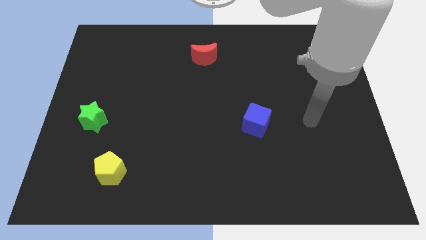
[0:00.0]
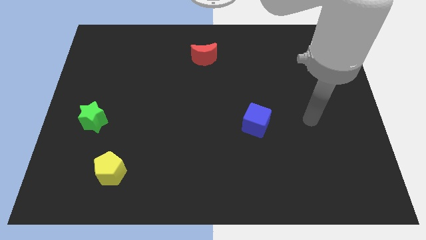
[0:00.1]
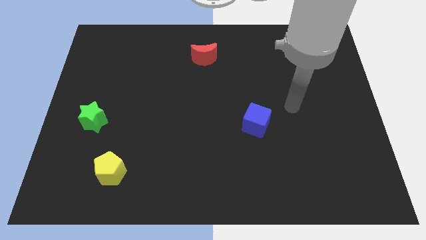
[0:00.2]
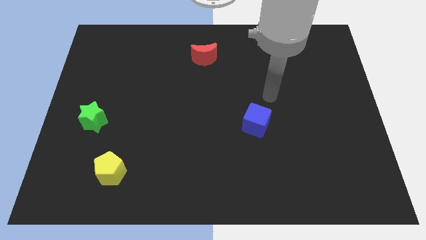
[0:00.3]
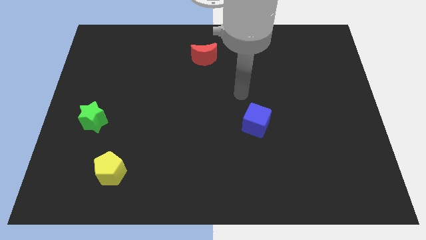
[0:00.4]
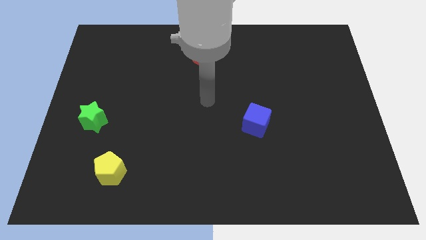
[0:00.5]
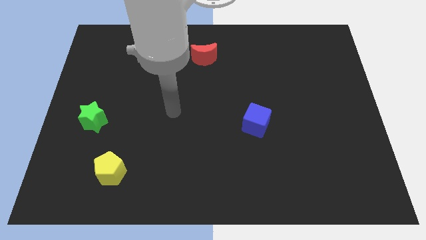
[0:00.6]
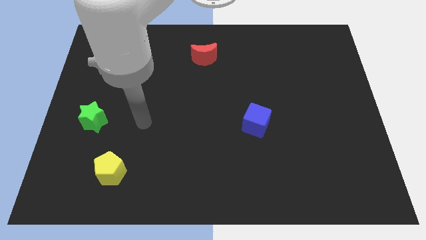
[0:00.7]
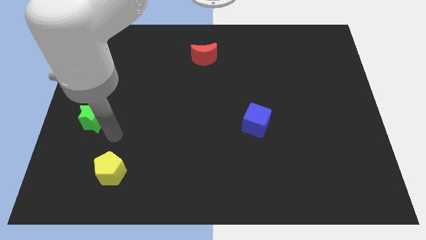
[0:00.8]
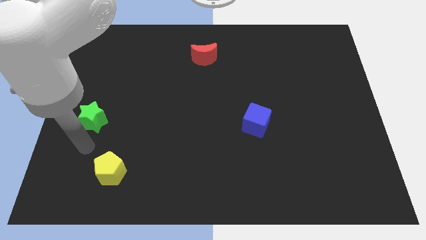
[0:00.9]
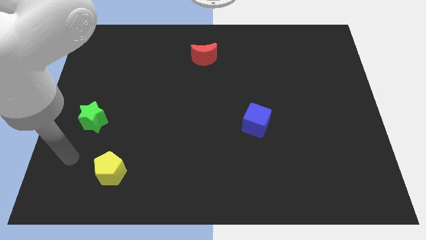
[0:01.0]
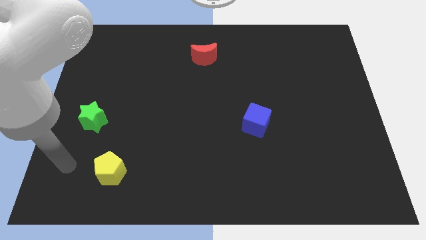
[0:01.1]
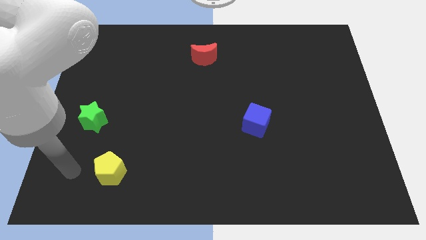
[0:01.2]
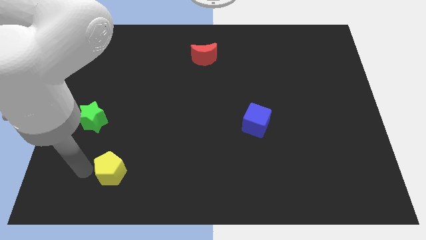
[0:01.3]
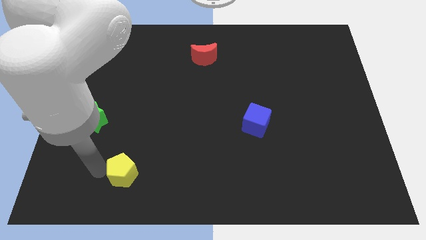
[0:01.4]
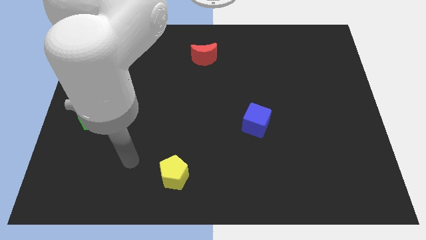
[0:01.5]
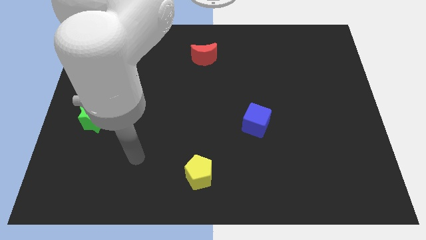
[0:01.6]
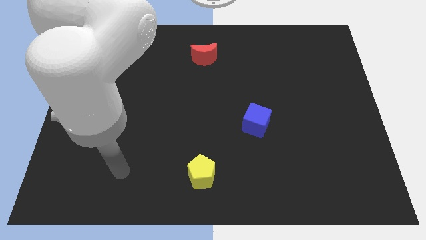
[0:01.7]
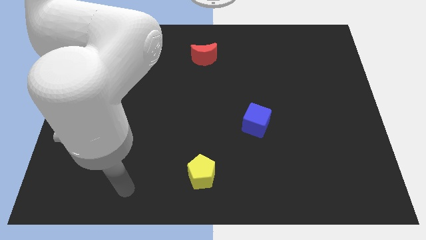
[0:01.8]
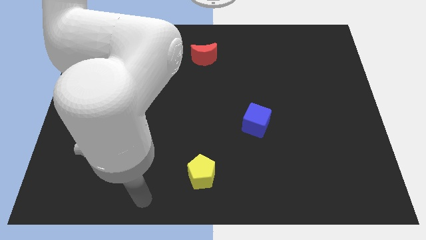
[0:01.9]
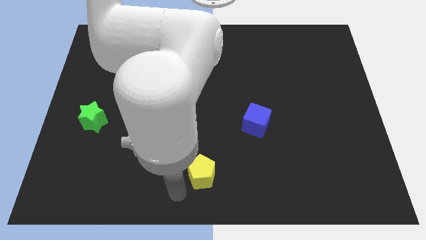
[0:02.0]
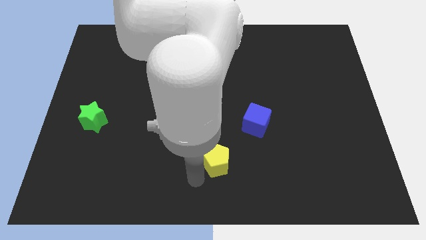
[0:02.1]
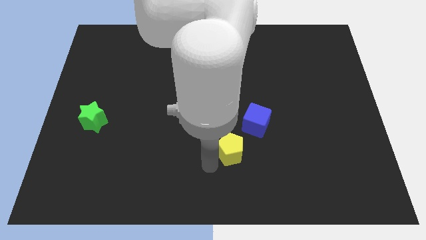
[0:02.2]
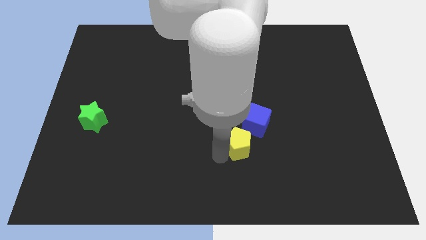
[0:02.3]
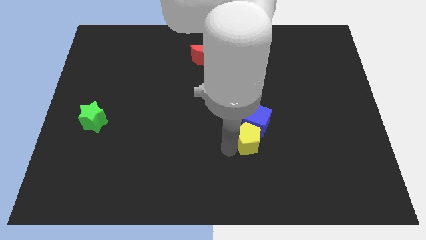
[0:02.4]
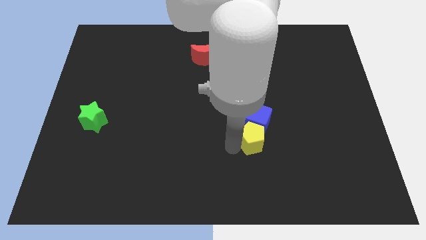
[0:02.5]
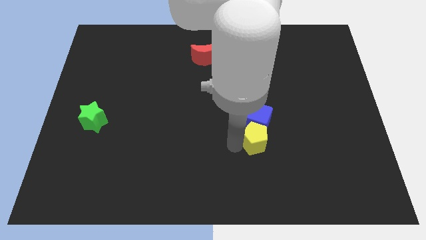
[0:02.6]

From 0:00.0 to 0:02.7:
put the pentagon to the blue cube

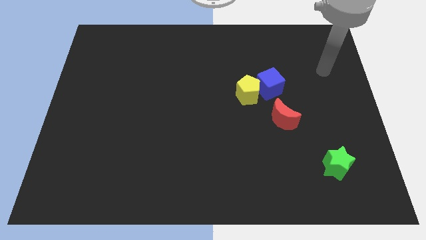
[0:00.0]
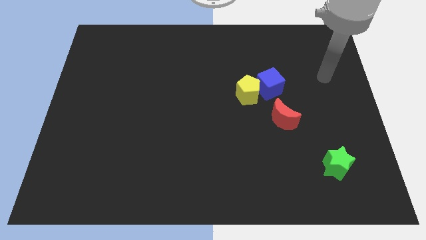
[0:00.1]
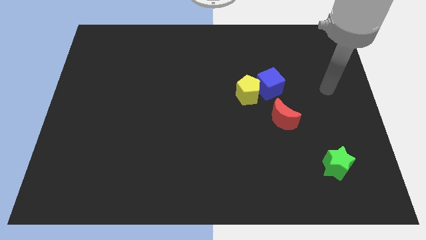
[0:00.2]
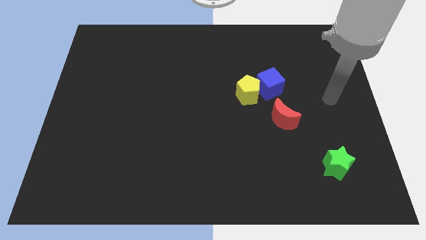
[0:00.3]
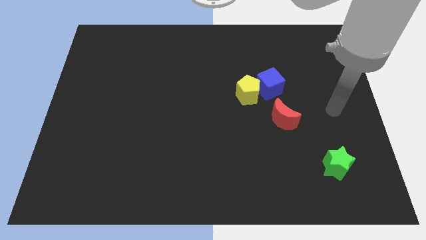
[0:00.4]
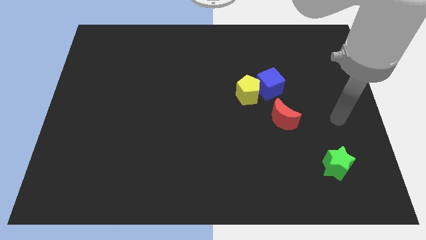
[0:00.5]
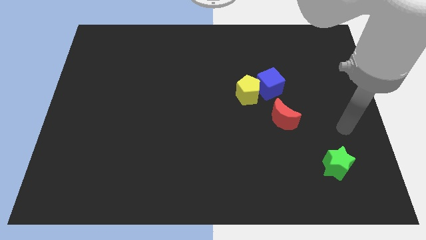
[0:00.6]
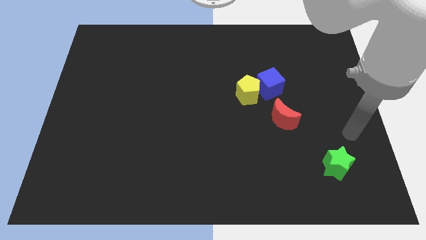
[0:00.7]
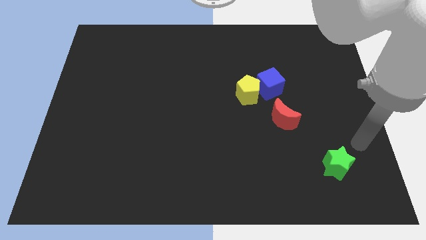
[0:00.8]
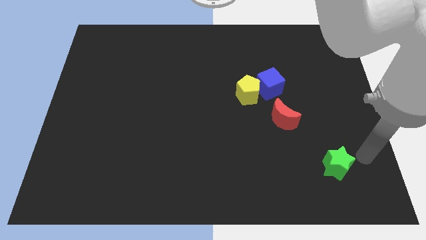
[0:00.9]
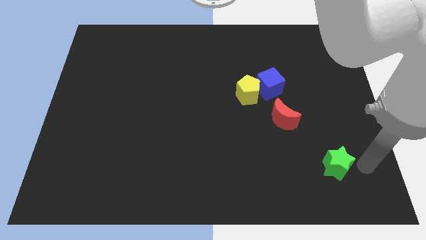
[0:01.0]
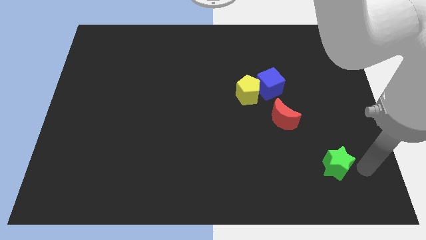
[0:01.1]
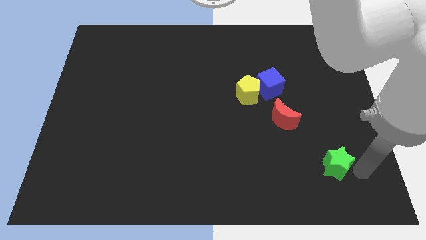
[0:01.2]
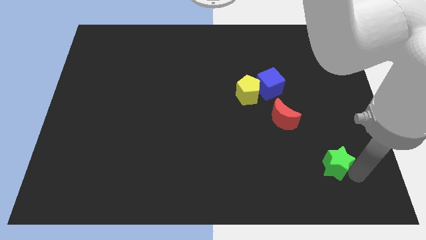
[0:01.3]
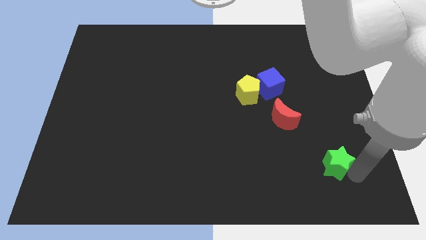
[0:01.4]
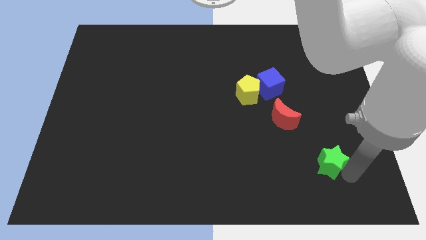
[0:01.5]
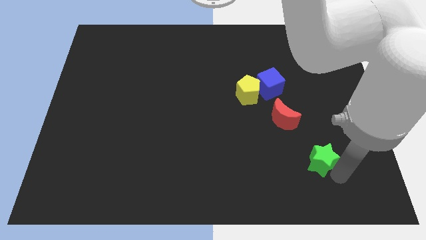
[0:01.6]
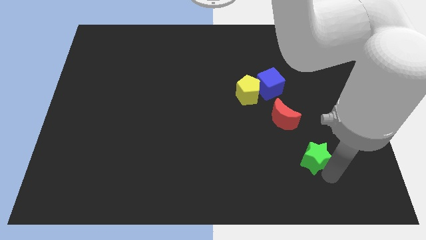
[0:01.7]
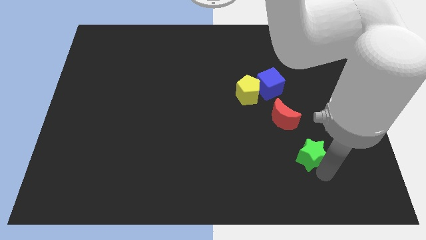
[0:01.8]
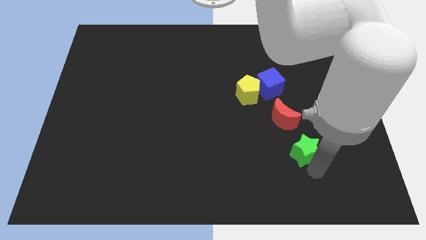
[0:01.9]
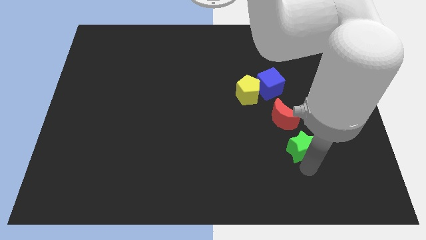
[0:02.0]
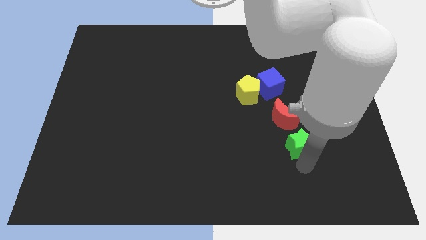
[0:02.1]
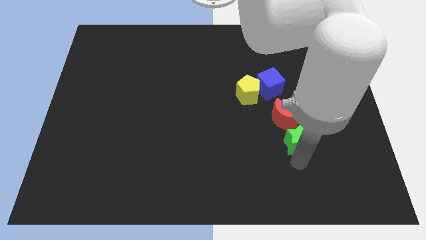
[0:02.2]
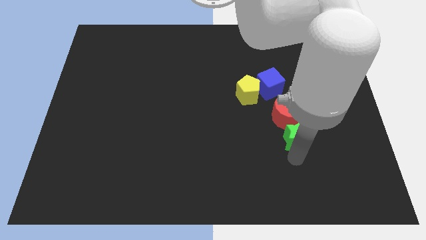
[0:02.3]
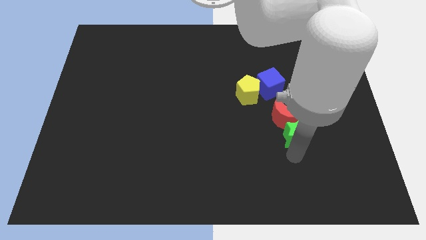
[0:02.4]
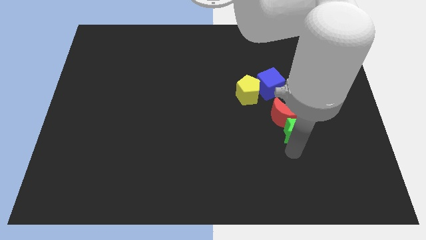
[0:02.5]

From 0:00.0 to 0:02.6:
move the green block towards the red block

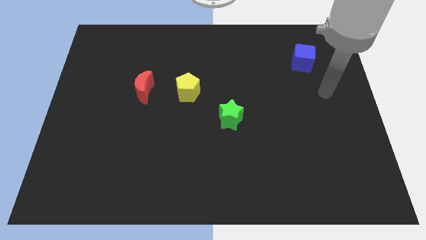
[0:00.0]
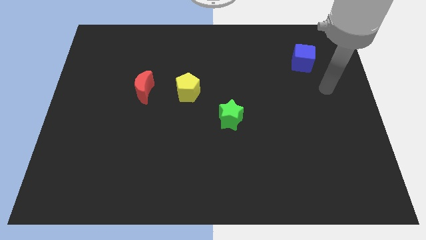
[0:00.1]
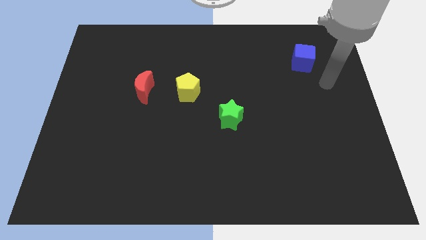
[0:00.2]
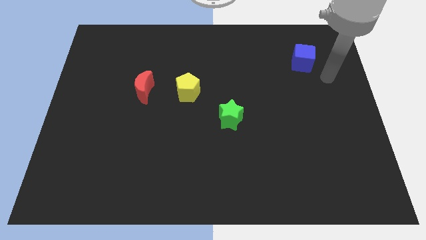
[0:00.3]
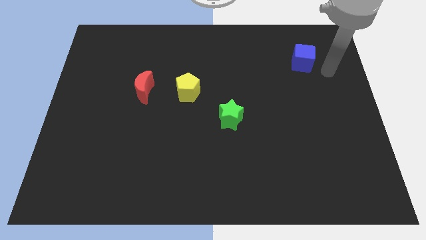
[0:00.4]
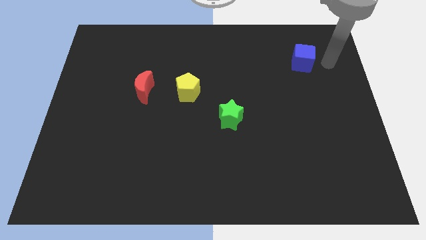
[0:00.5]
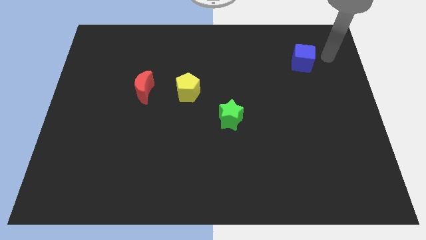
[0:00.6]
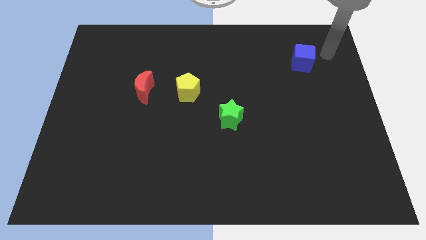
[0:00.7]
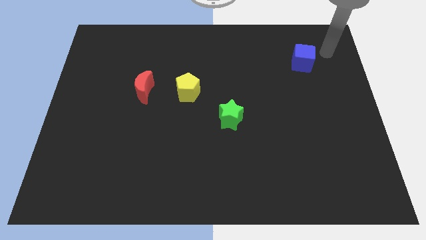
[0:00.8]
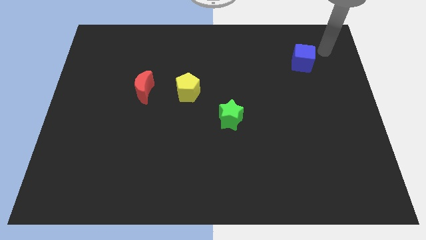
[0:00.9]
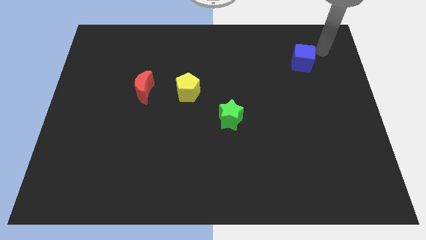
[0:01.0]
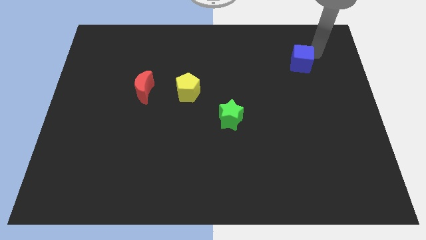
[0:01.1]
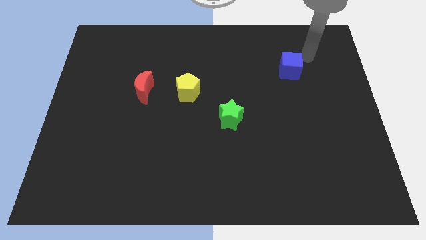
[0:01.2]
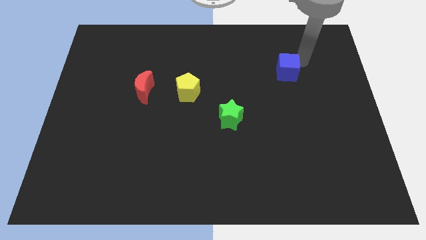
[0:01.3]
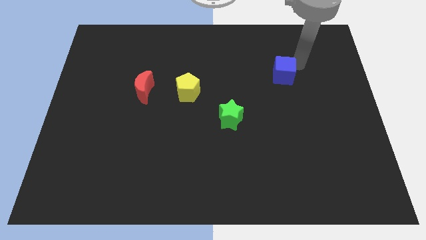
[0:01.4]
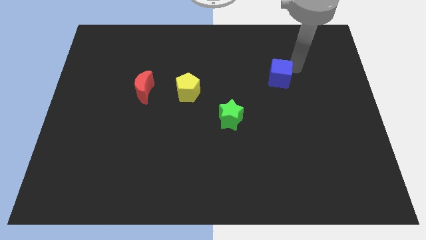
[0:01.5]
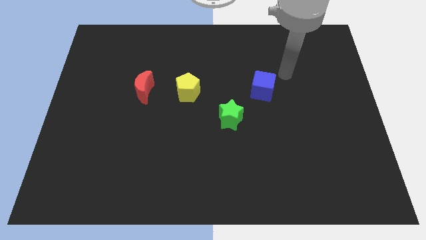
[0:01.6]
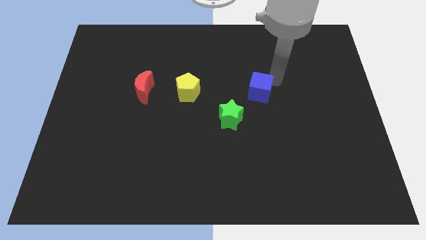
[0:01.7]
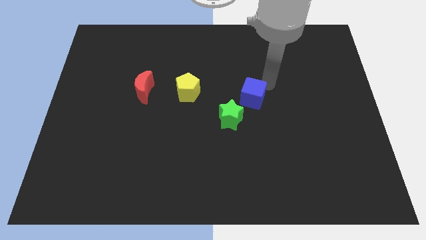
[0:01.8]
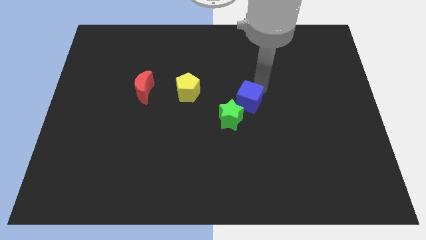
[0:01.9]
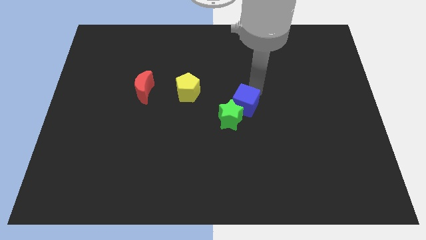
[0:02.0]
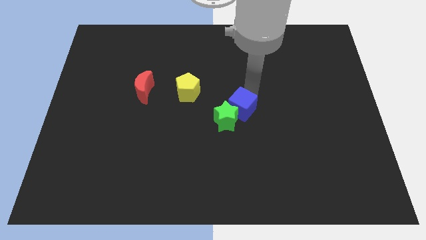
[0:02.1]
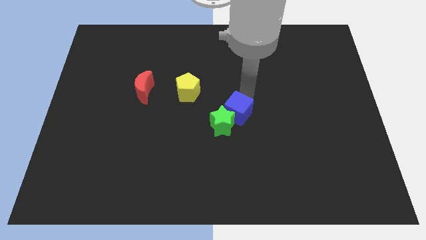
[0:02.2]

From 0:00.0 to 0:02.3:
put the cube towards the star

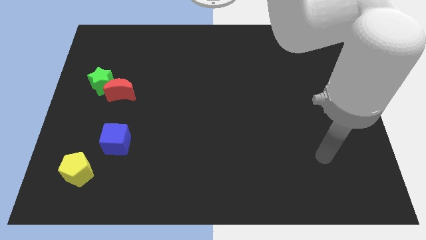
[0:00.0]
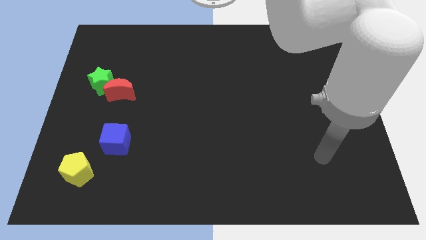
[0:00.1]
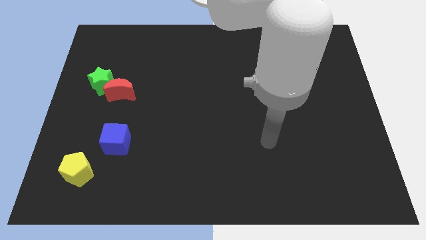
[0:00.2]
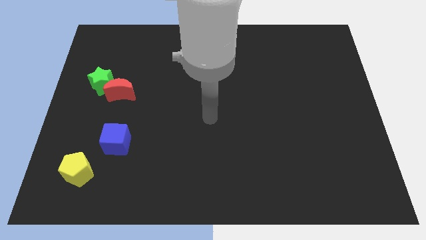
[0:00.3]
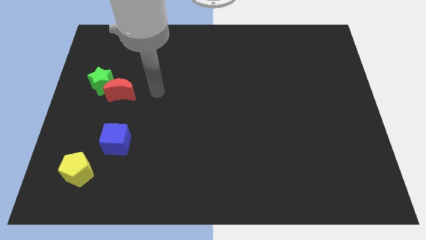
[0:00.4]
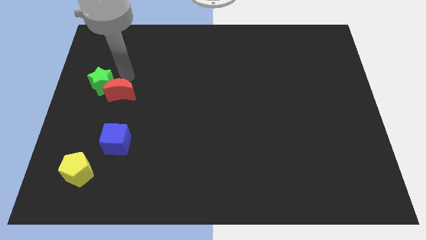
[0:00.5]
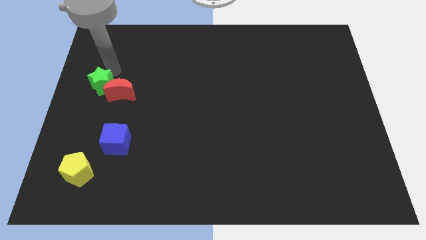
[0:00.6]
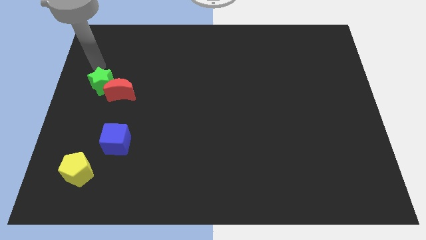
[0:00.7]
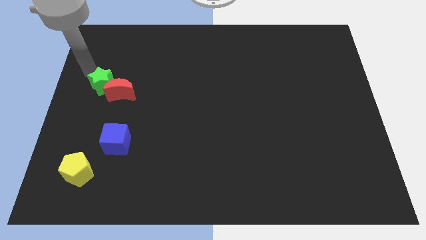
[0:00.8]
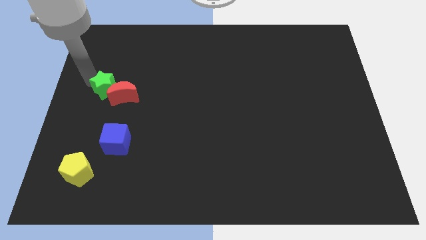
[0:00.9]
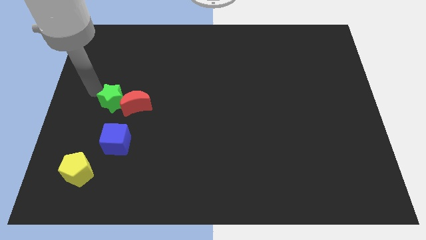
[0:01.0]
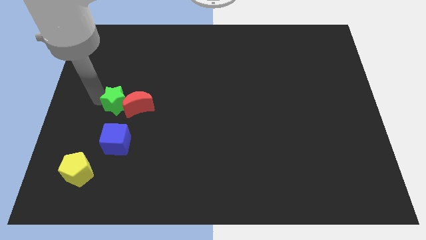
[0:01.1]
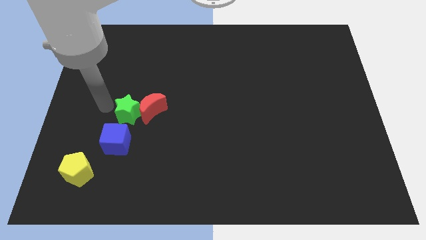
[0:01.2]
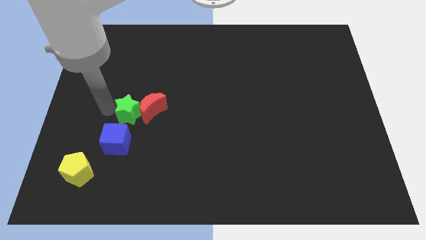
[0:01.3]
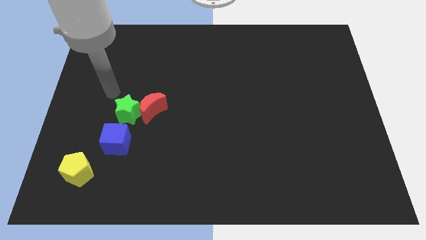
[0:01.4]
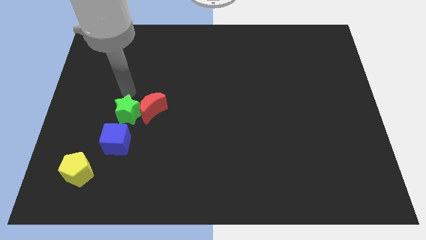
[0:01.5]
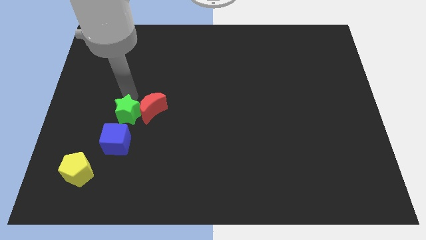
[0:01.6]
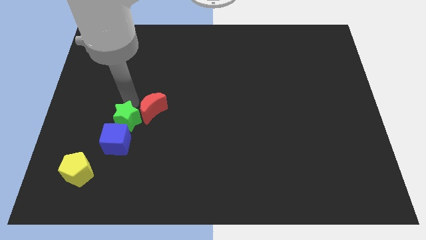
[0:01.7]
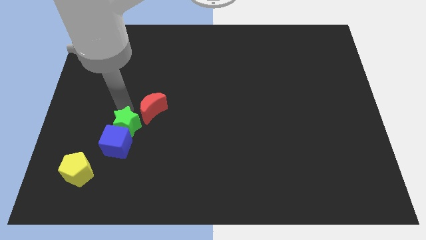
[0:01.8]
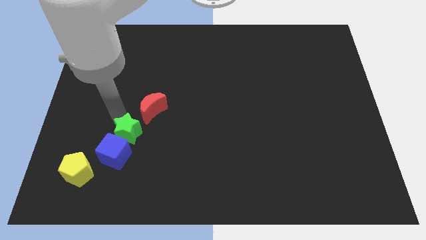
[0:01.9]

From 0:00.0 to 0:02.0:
move the green block to the blue cube
